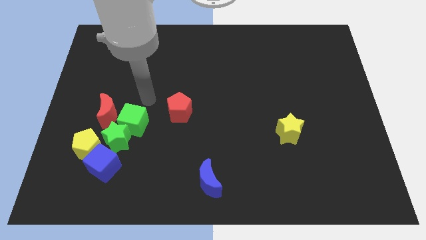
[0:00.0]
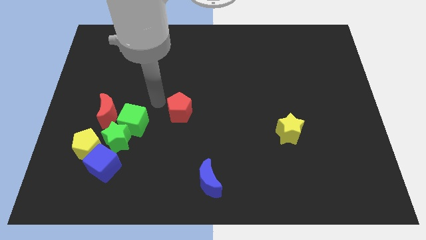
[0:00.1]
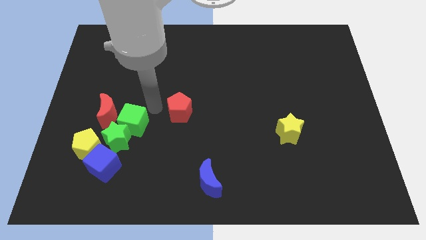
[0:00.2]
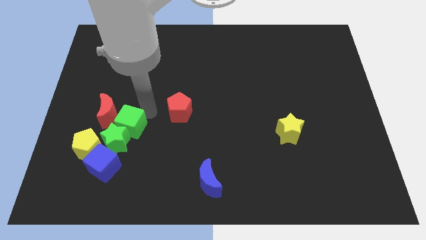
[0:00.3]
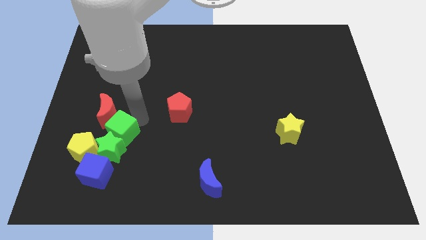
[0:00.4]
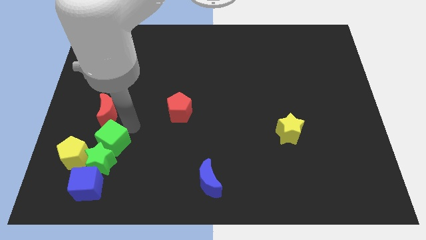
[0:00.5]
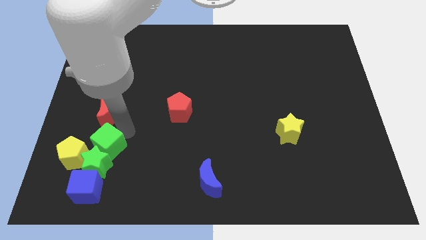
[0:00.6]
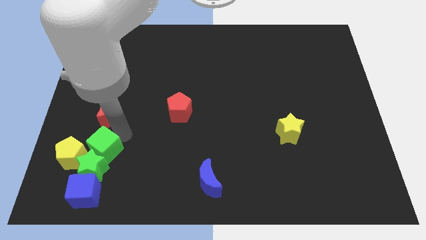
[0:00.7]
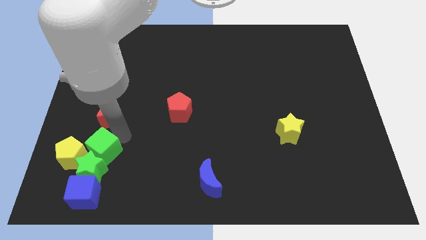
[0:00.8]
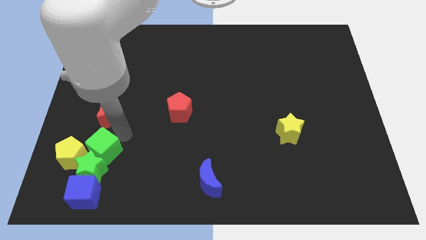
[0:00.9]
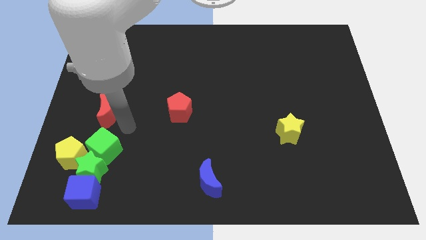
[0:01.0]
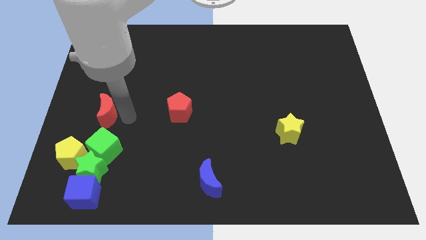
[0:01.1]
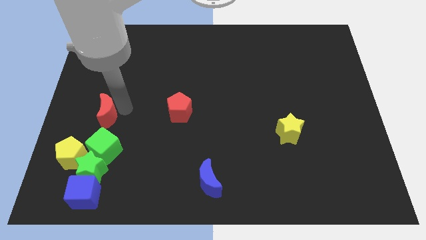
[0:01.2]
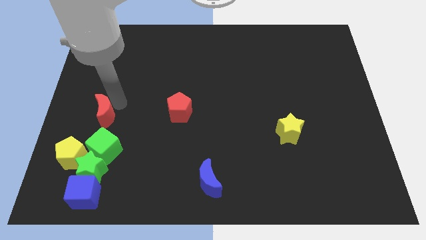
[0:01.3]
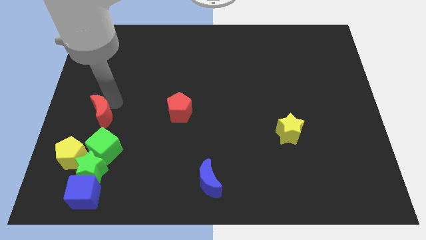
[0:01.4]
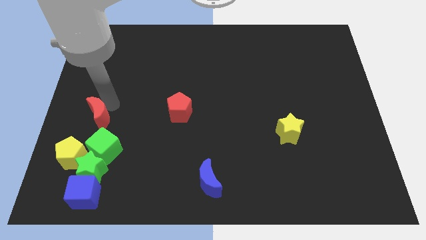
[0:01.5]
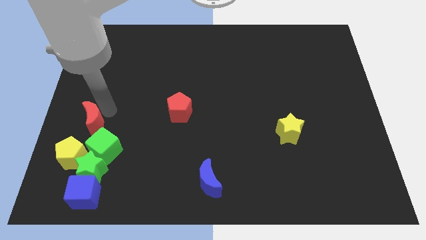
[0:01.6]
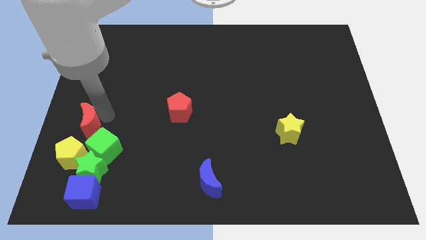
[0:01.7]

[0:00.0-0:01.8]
push the green cube into the green star

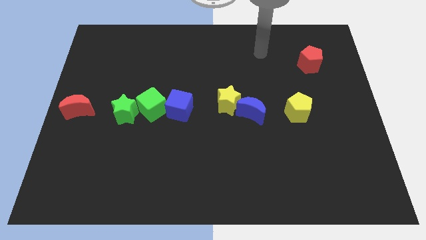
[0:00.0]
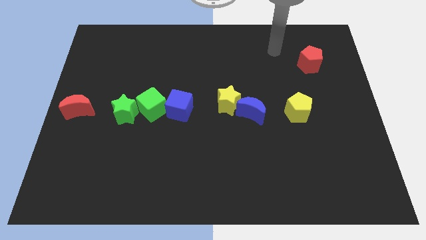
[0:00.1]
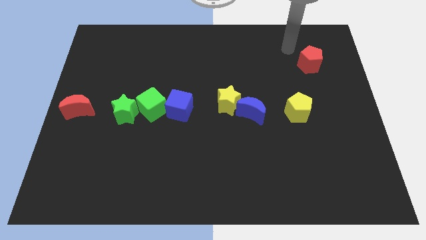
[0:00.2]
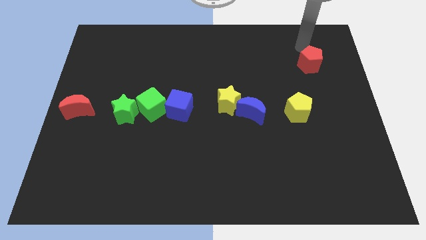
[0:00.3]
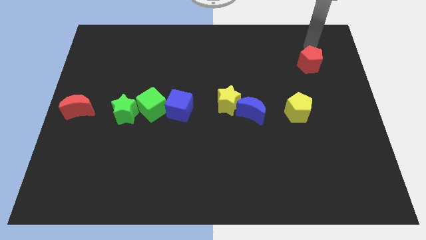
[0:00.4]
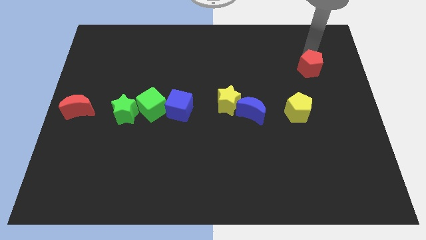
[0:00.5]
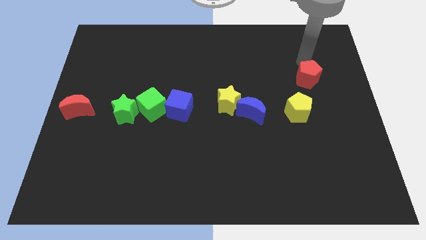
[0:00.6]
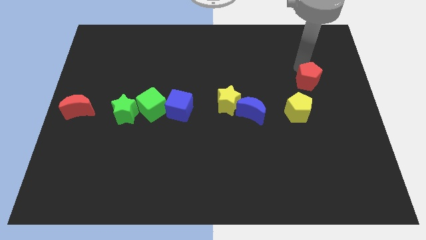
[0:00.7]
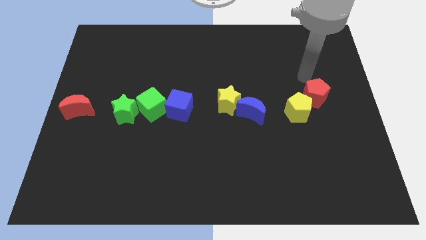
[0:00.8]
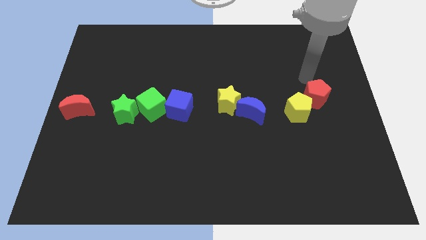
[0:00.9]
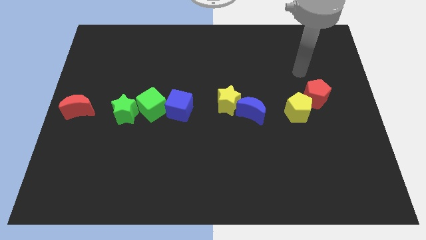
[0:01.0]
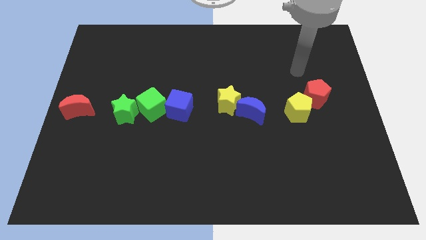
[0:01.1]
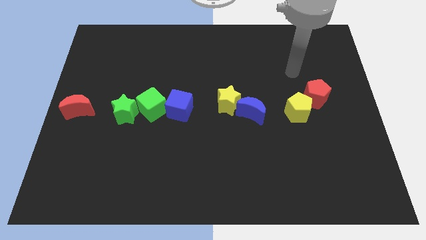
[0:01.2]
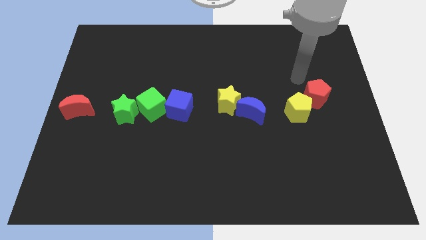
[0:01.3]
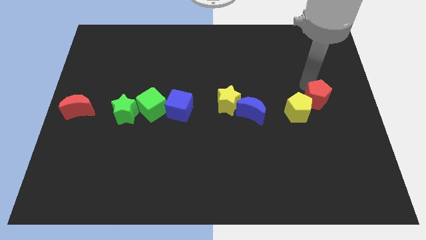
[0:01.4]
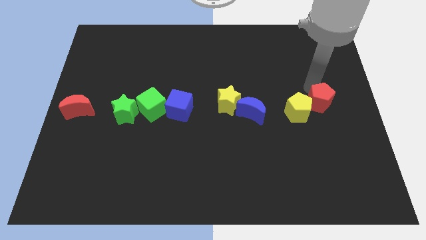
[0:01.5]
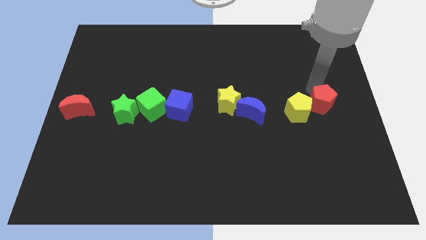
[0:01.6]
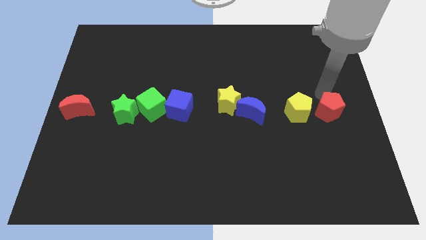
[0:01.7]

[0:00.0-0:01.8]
move red pentagon diagonal top right of yellow pentagon

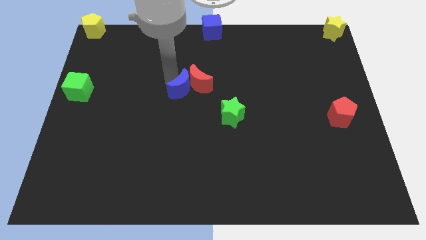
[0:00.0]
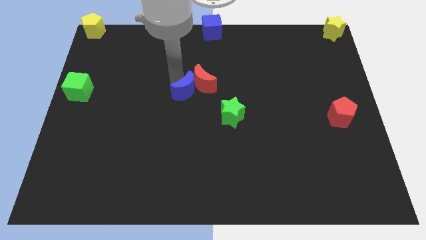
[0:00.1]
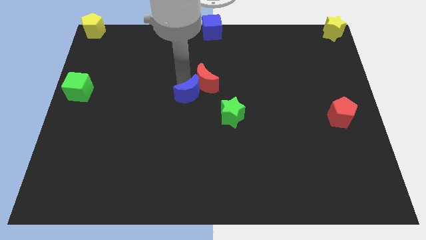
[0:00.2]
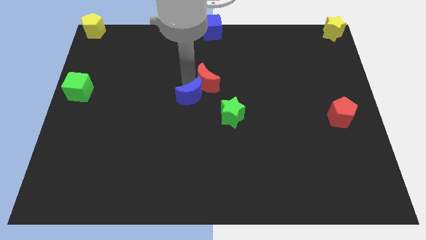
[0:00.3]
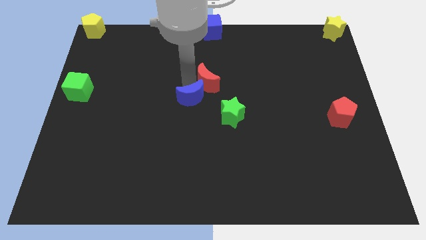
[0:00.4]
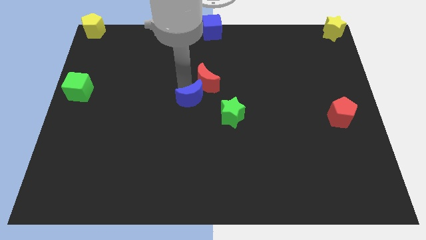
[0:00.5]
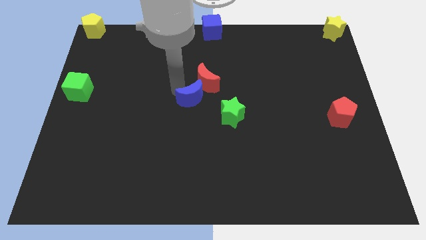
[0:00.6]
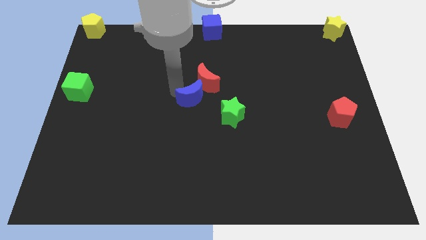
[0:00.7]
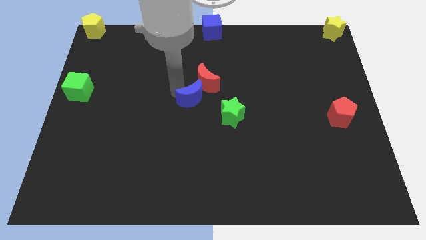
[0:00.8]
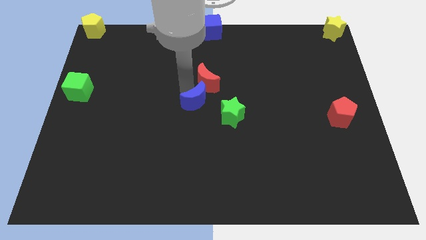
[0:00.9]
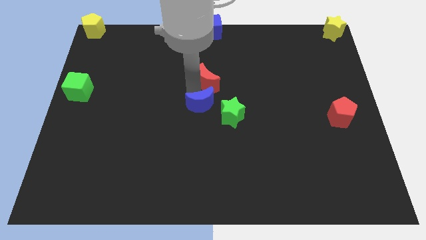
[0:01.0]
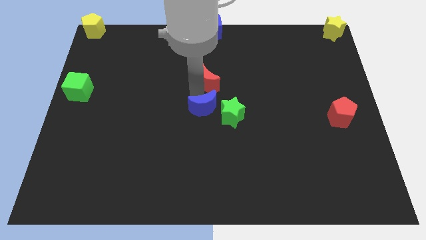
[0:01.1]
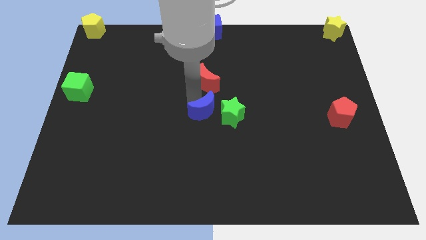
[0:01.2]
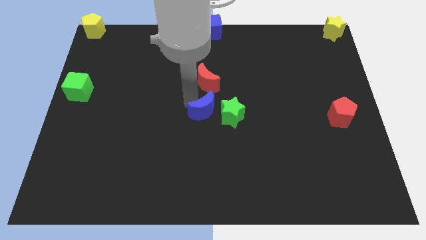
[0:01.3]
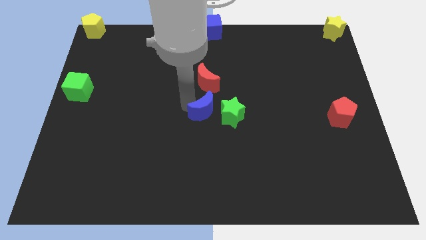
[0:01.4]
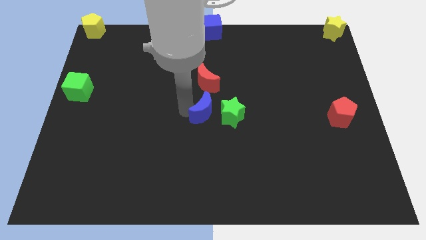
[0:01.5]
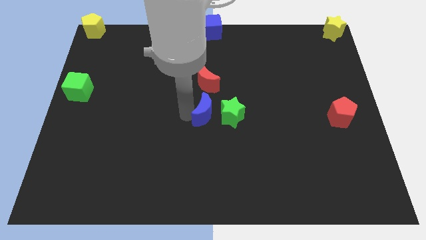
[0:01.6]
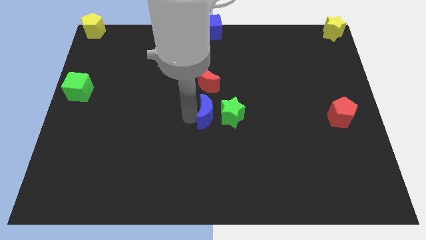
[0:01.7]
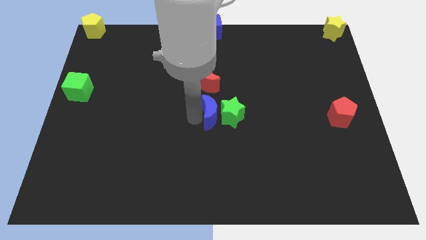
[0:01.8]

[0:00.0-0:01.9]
move the blue crescent vertically below the red moon

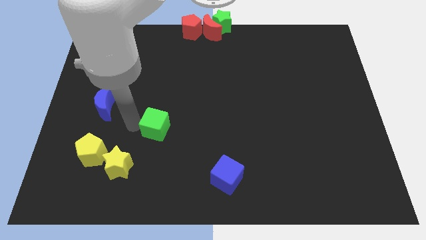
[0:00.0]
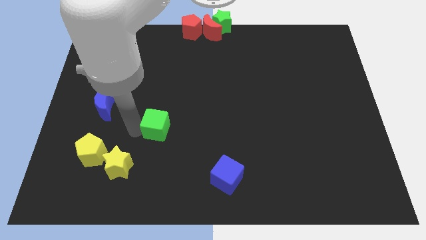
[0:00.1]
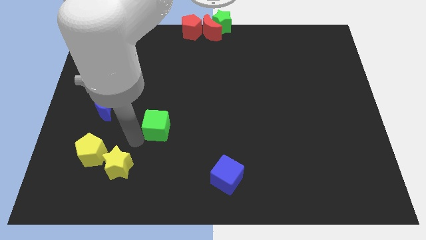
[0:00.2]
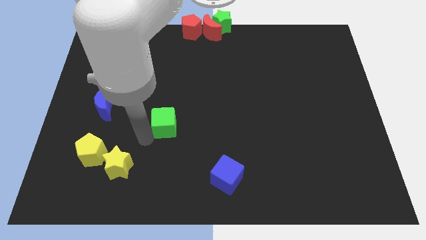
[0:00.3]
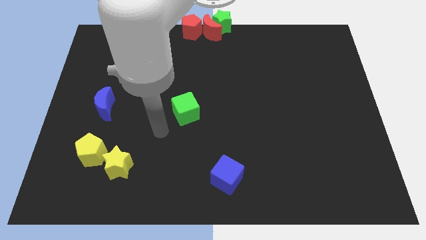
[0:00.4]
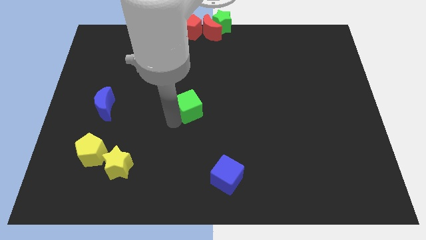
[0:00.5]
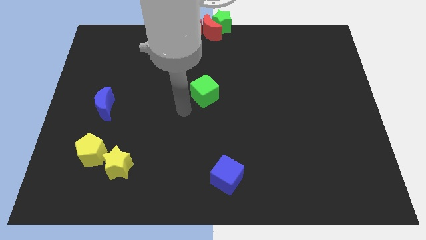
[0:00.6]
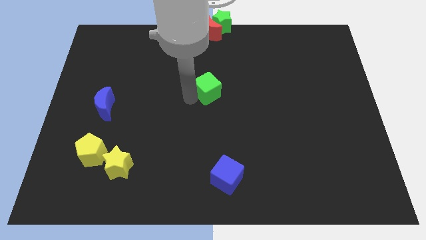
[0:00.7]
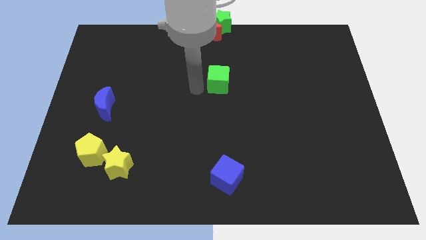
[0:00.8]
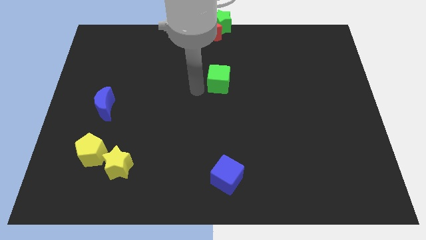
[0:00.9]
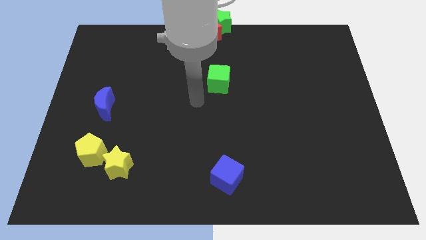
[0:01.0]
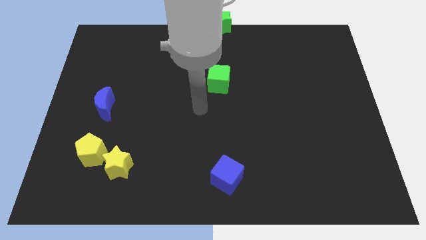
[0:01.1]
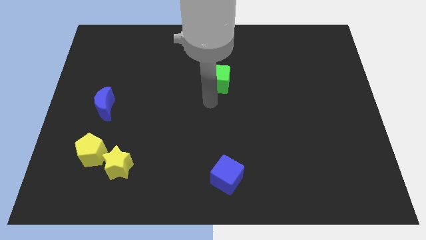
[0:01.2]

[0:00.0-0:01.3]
place green cube above blue cube

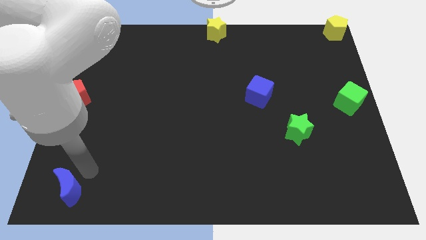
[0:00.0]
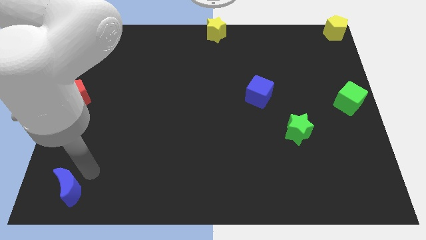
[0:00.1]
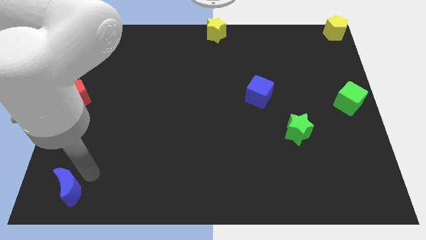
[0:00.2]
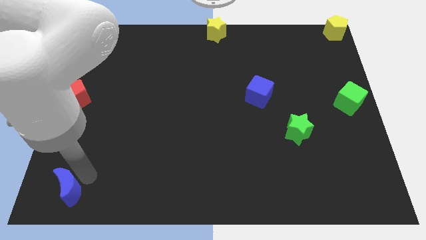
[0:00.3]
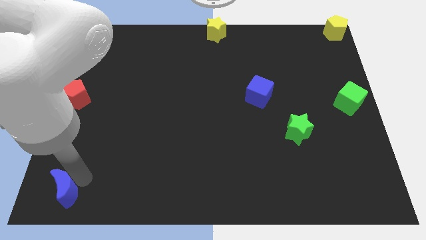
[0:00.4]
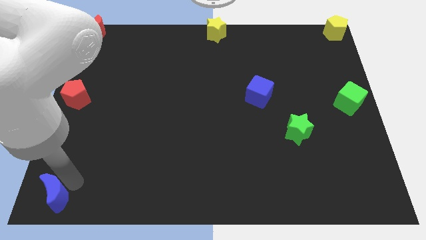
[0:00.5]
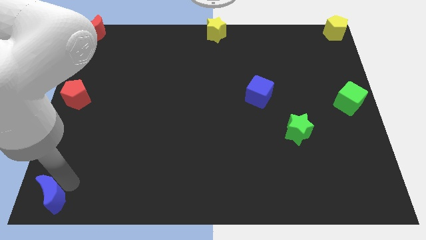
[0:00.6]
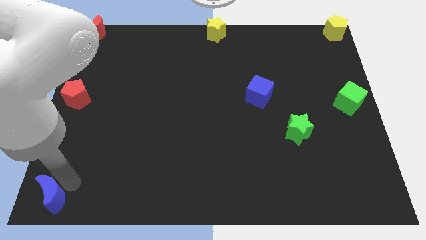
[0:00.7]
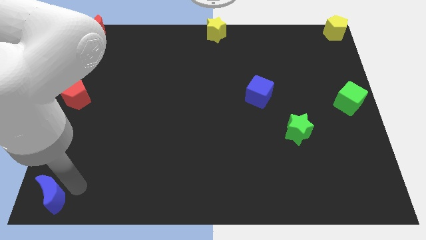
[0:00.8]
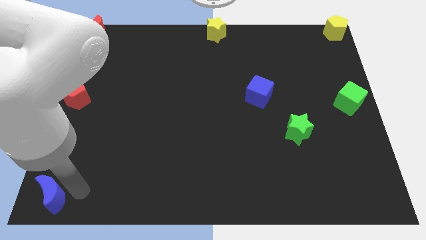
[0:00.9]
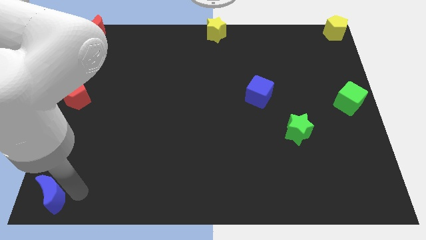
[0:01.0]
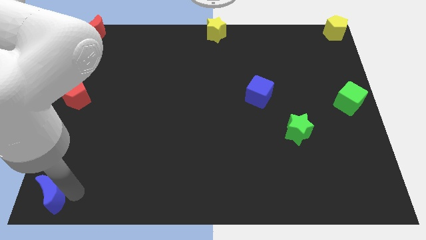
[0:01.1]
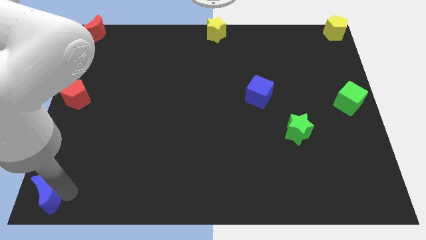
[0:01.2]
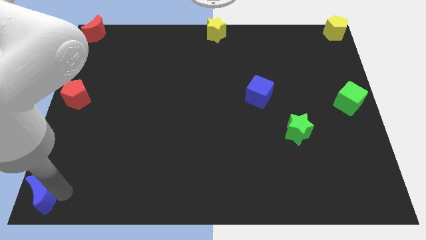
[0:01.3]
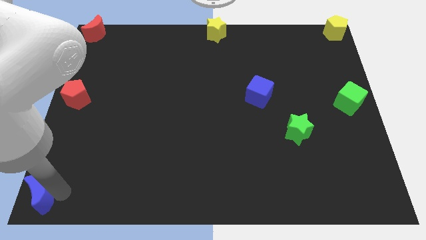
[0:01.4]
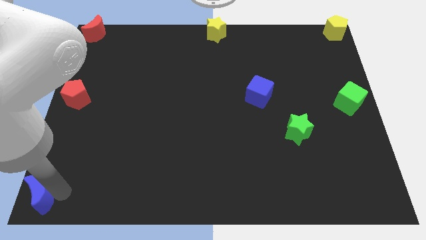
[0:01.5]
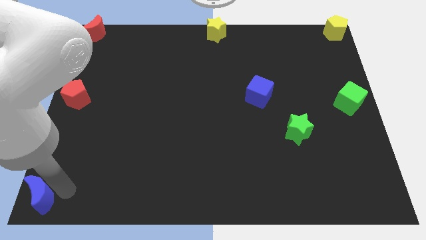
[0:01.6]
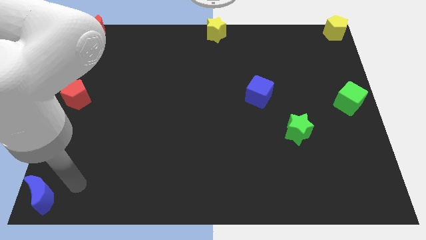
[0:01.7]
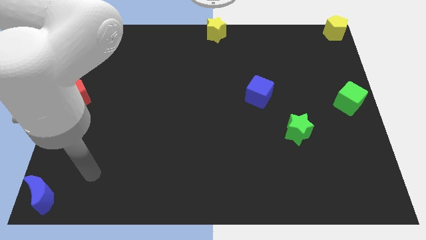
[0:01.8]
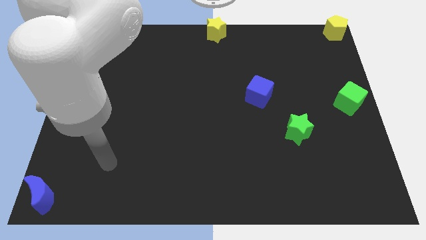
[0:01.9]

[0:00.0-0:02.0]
place the blue moon to the bottom left center of the board
